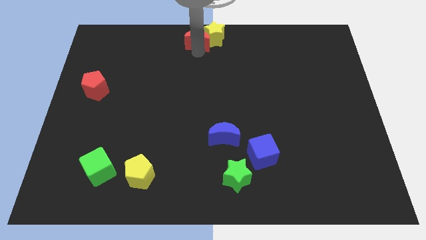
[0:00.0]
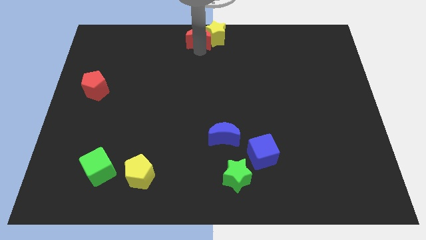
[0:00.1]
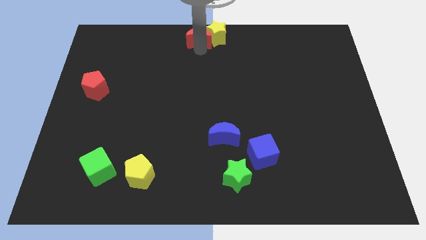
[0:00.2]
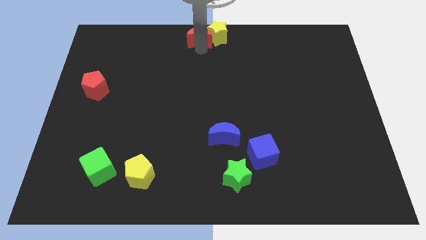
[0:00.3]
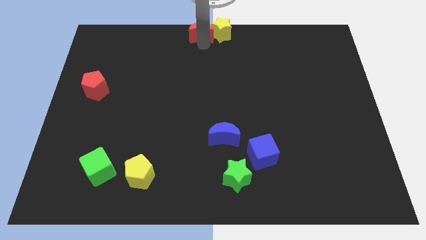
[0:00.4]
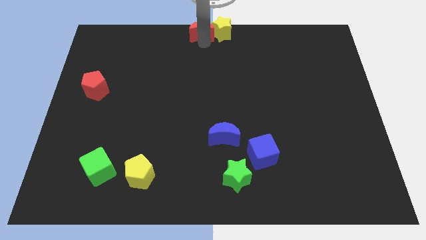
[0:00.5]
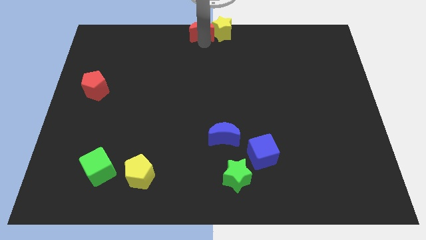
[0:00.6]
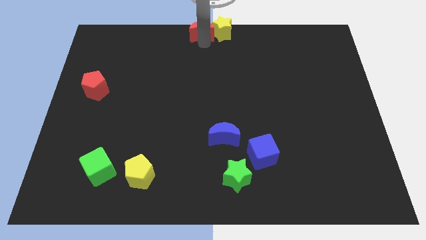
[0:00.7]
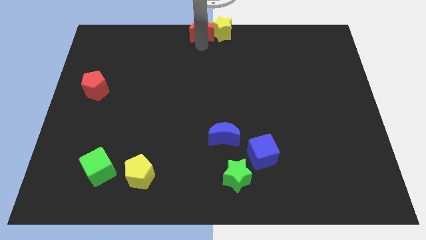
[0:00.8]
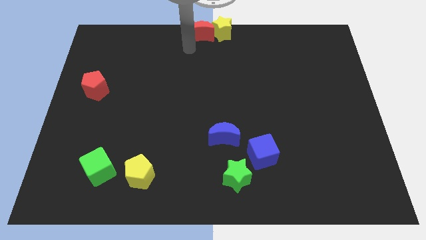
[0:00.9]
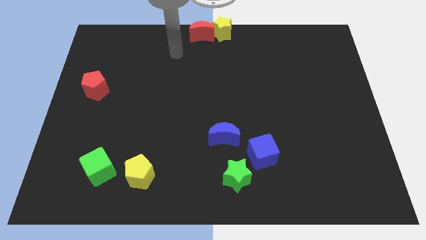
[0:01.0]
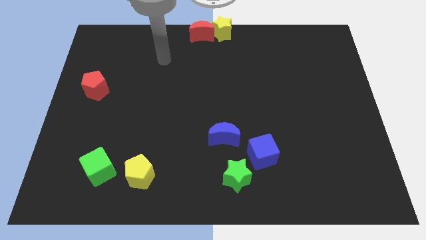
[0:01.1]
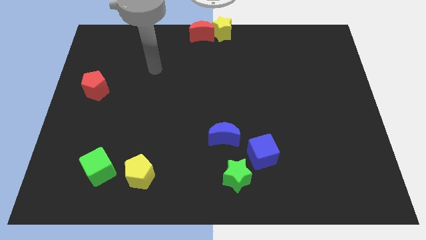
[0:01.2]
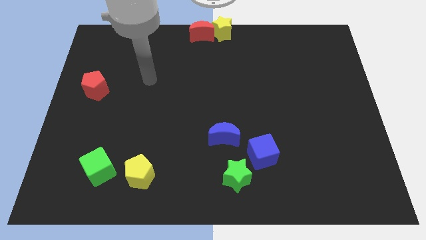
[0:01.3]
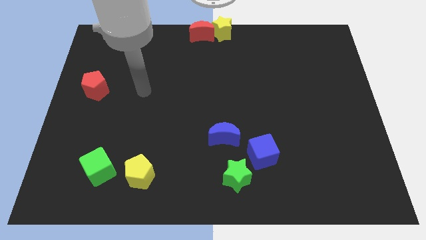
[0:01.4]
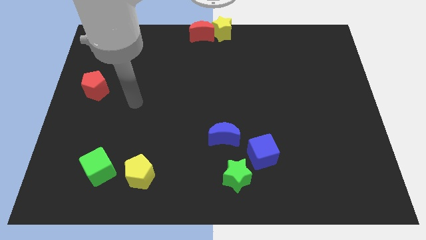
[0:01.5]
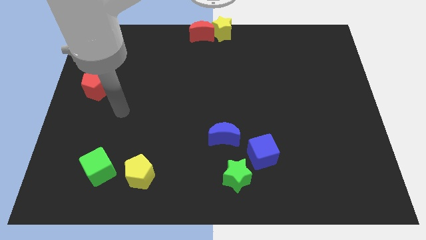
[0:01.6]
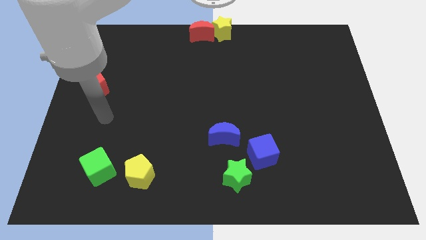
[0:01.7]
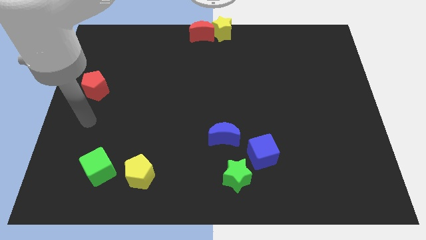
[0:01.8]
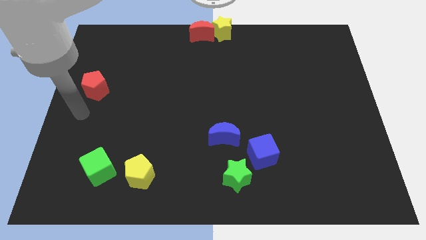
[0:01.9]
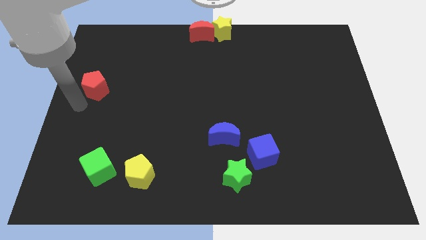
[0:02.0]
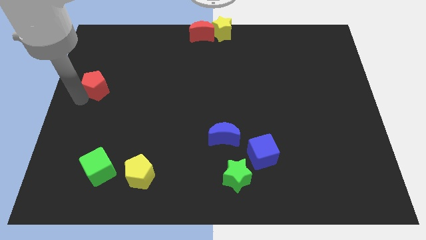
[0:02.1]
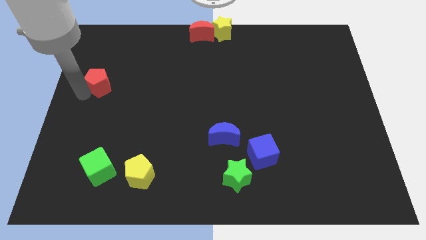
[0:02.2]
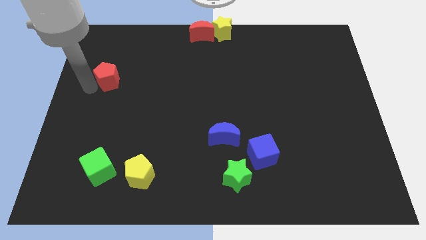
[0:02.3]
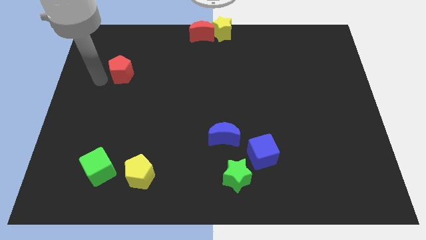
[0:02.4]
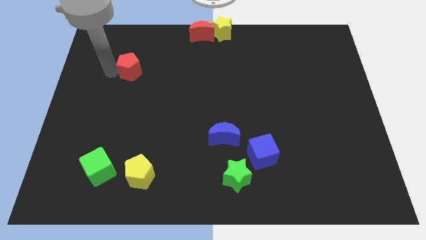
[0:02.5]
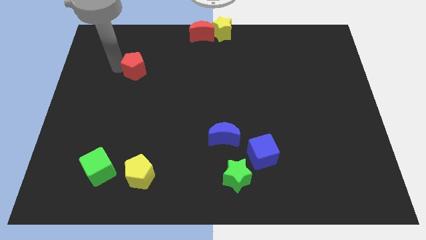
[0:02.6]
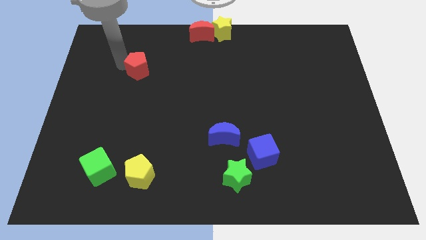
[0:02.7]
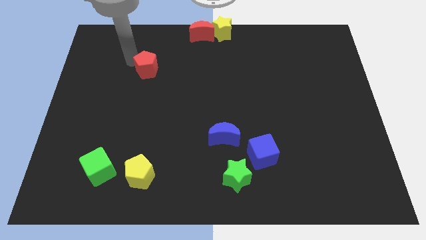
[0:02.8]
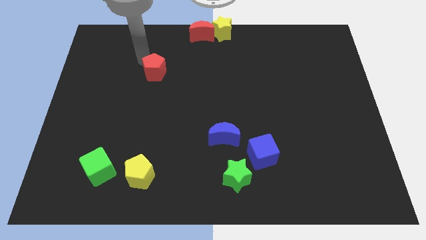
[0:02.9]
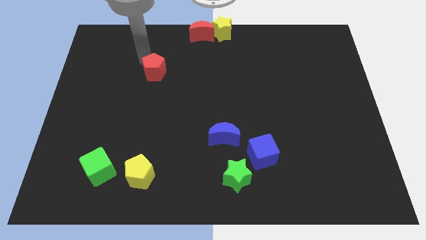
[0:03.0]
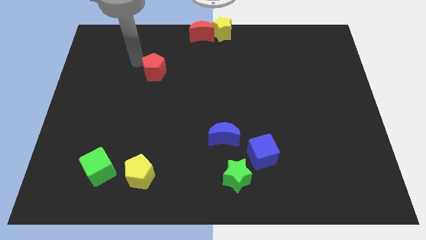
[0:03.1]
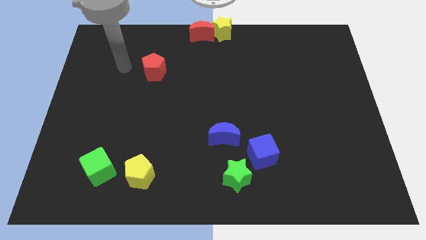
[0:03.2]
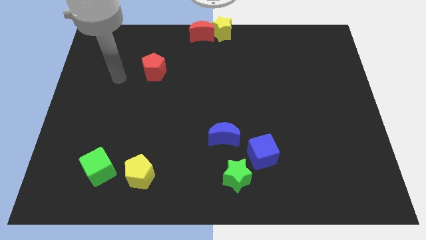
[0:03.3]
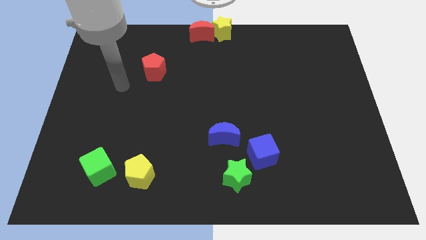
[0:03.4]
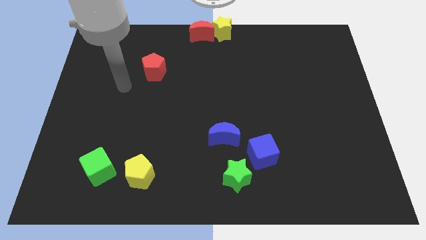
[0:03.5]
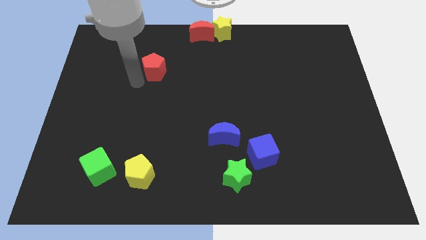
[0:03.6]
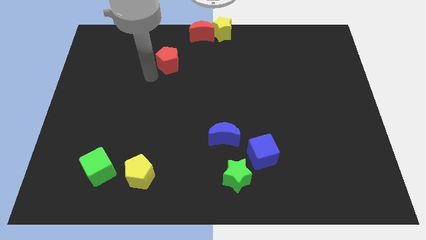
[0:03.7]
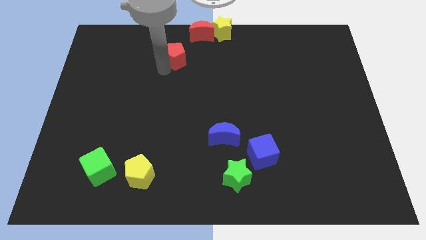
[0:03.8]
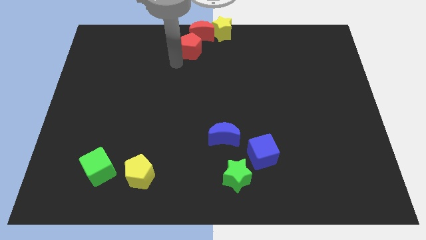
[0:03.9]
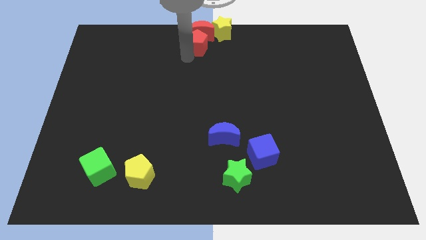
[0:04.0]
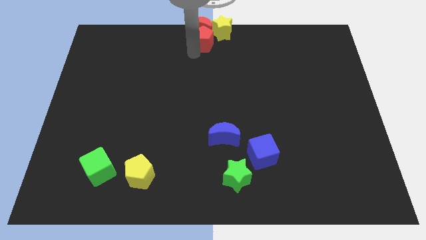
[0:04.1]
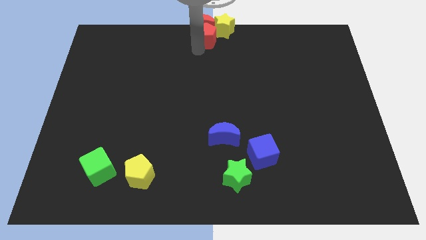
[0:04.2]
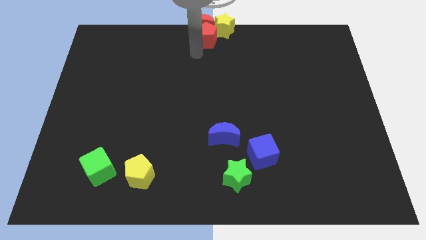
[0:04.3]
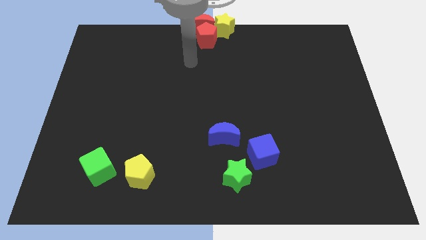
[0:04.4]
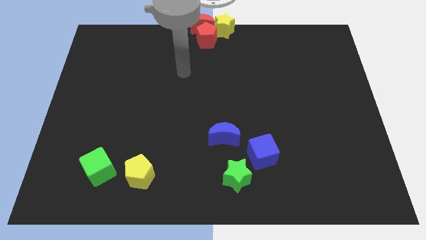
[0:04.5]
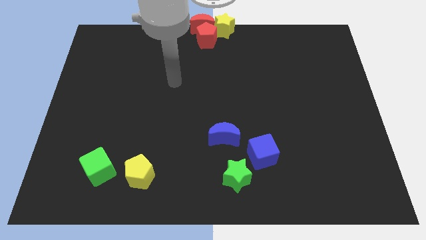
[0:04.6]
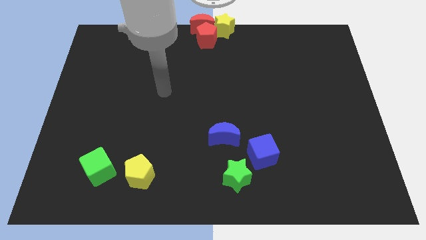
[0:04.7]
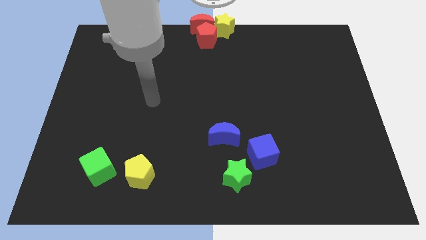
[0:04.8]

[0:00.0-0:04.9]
move the red penatgon to bottom of the red moon

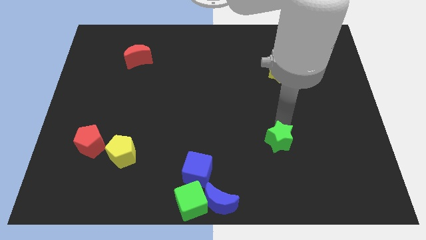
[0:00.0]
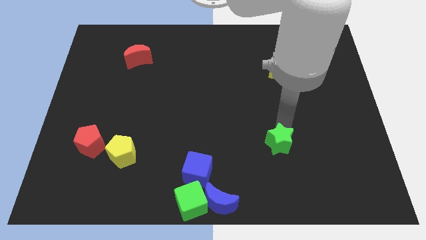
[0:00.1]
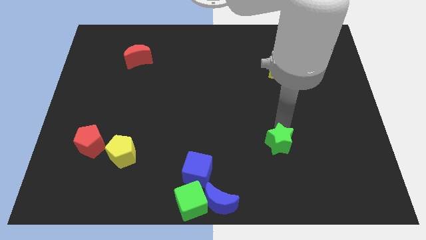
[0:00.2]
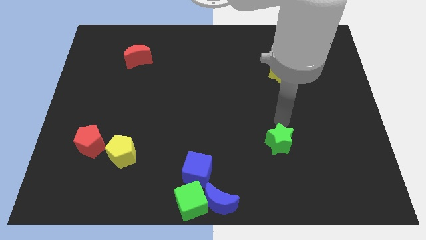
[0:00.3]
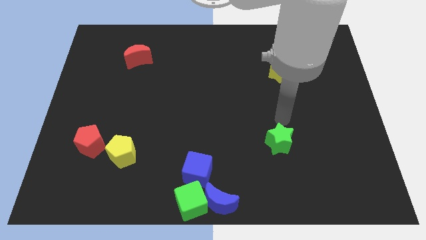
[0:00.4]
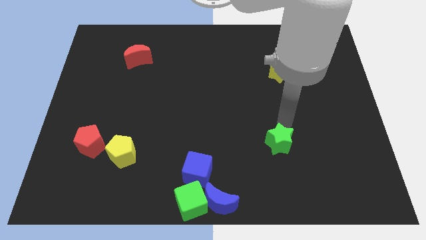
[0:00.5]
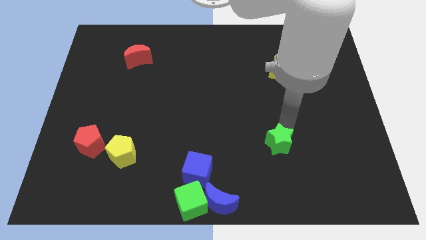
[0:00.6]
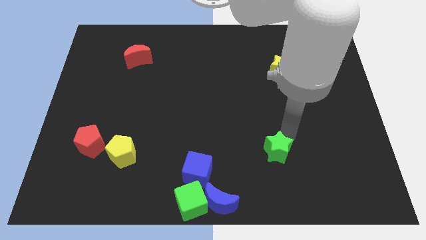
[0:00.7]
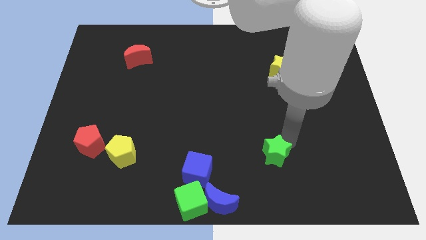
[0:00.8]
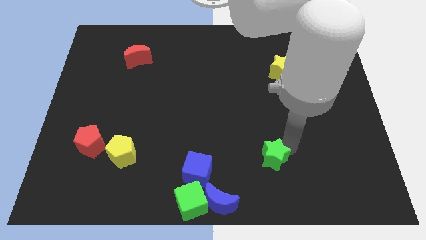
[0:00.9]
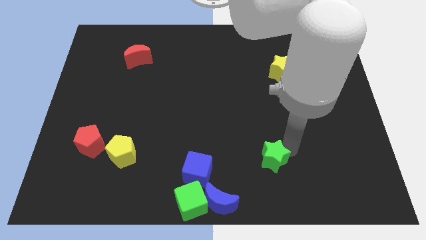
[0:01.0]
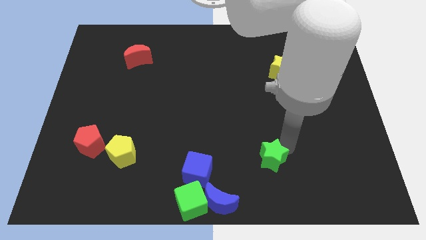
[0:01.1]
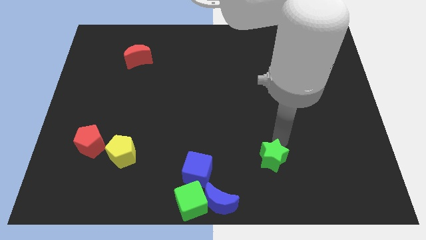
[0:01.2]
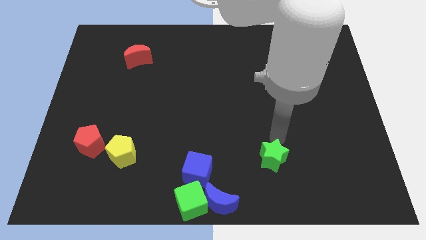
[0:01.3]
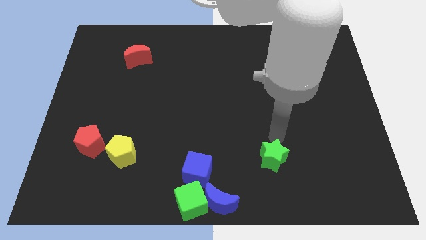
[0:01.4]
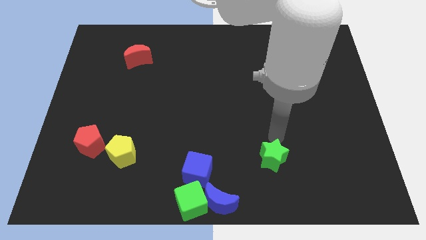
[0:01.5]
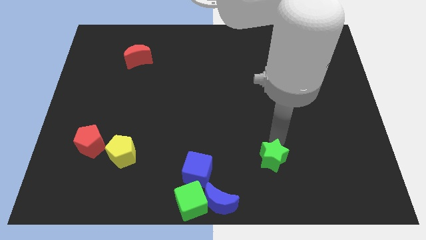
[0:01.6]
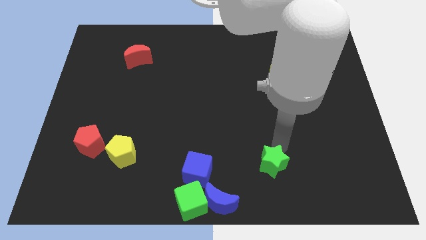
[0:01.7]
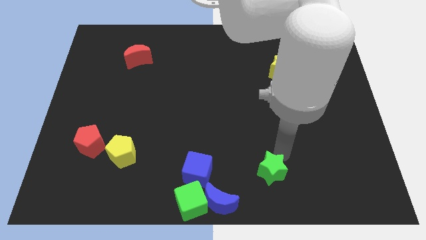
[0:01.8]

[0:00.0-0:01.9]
push the green star to the bottom of the board

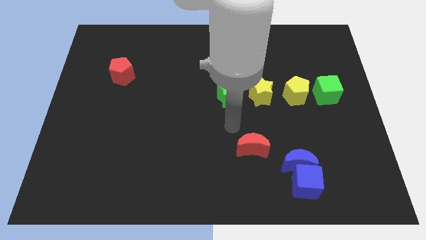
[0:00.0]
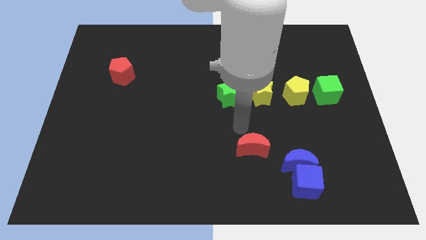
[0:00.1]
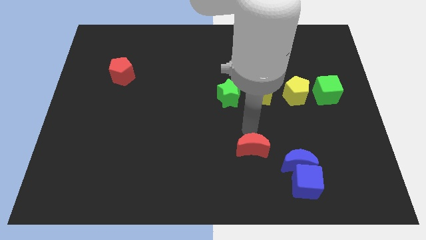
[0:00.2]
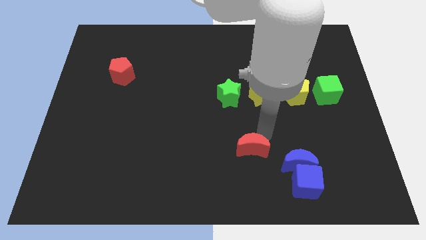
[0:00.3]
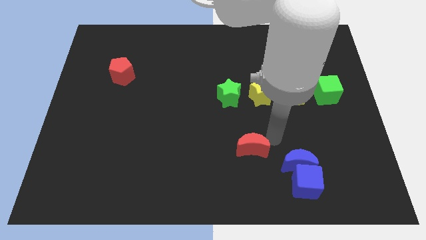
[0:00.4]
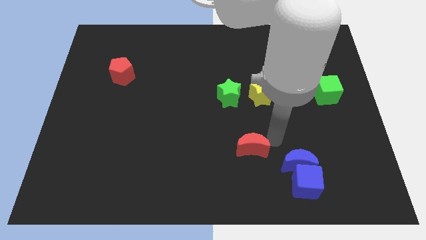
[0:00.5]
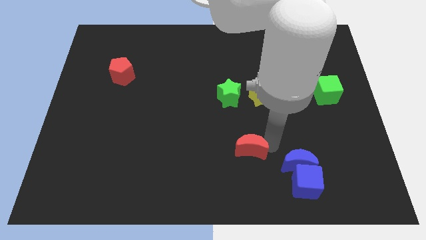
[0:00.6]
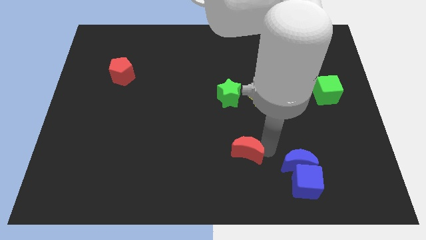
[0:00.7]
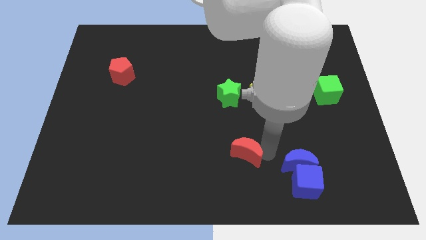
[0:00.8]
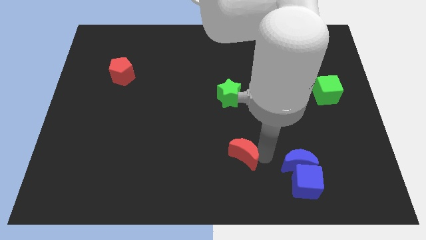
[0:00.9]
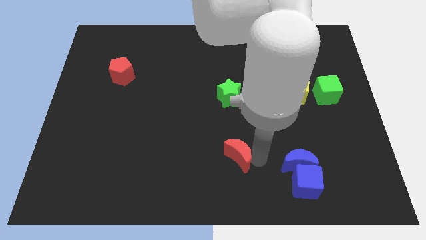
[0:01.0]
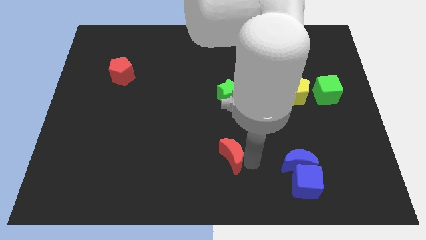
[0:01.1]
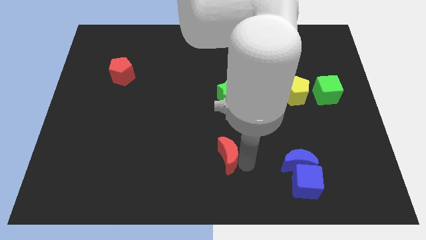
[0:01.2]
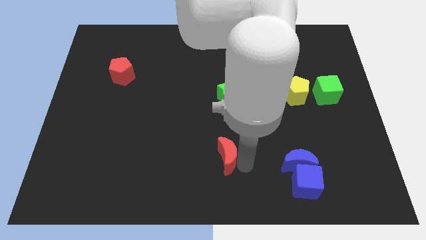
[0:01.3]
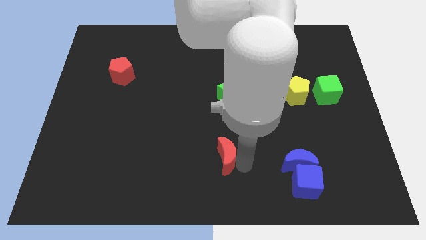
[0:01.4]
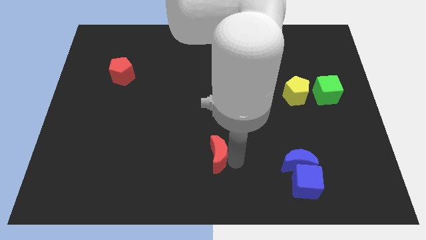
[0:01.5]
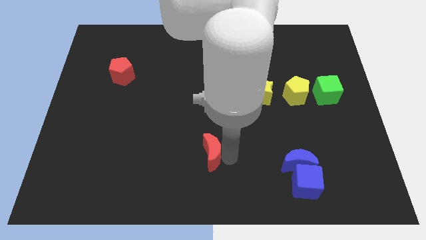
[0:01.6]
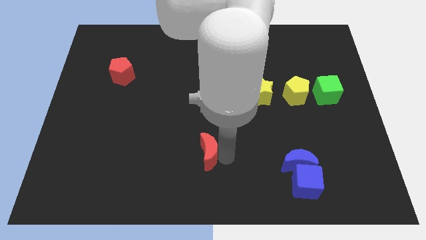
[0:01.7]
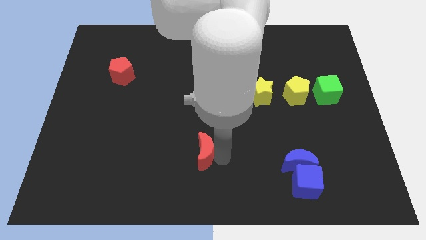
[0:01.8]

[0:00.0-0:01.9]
slide the red crescent towards left a bit

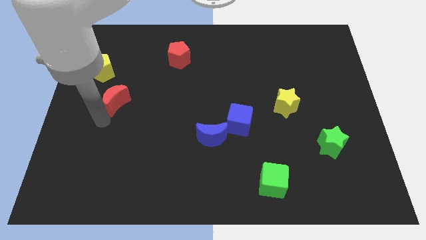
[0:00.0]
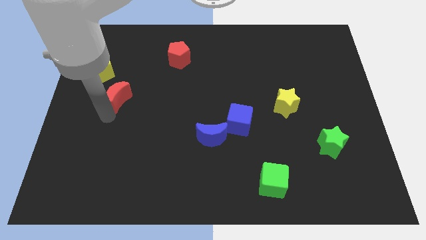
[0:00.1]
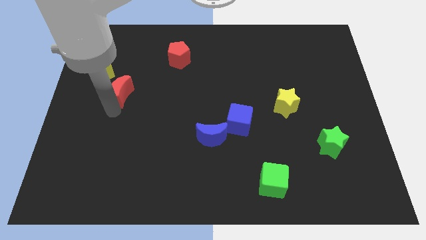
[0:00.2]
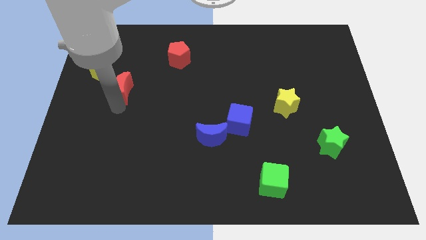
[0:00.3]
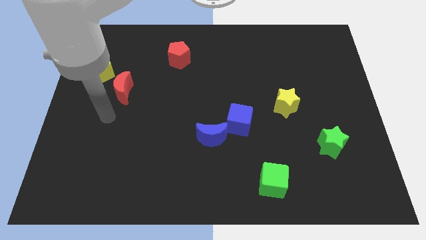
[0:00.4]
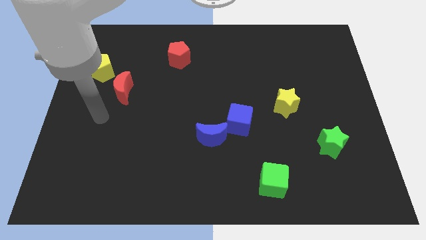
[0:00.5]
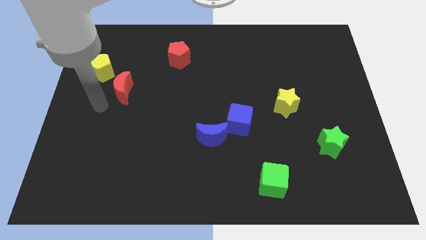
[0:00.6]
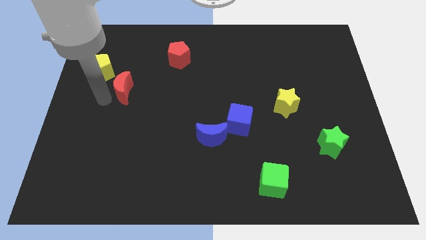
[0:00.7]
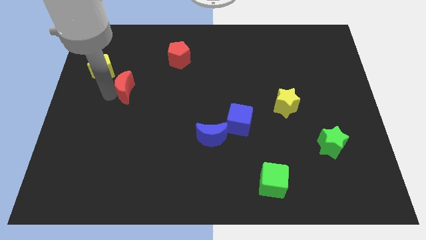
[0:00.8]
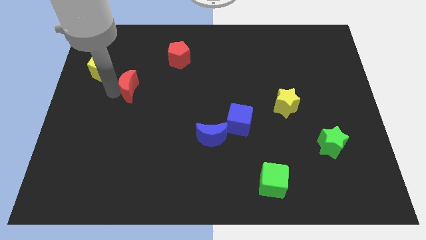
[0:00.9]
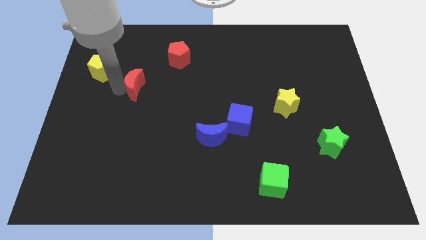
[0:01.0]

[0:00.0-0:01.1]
slide red moon diagonal to red pentagon
